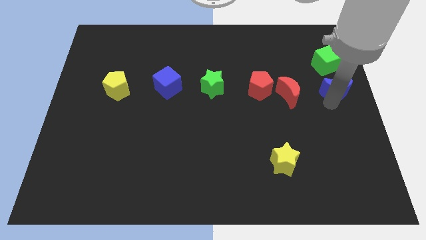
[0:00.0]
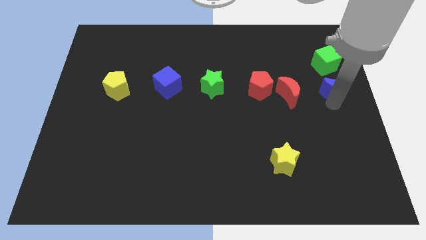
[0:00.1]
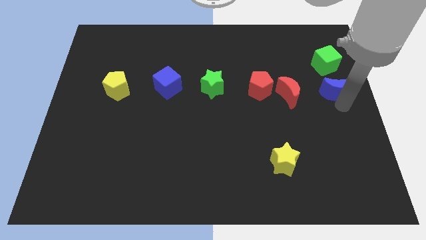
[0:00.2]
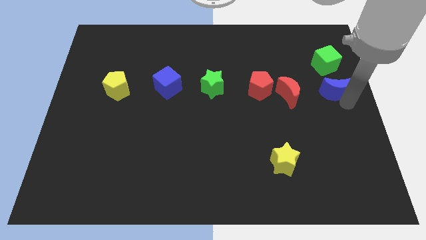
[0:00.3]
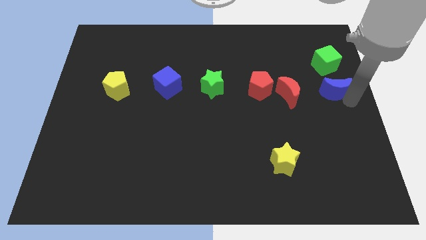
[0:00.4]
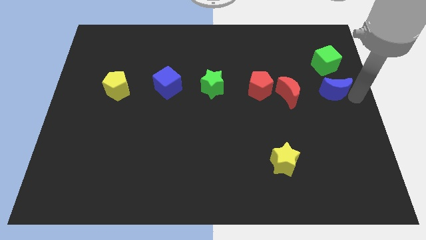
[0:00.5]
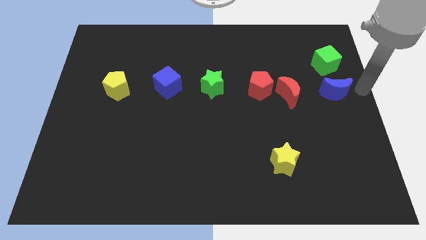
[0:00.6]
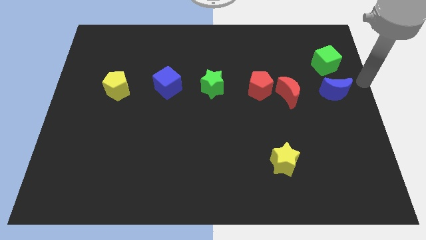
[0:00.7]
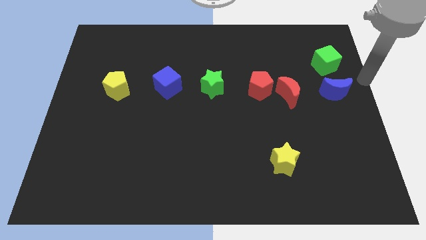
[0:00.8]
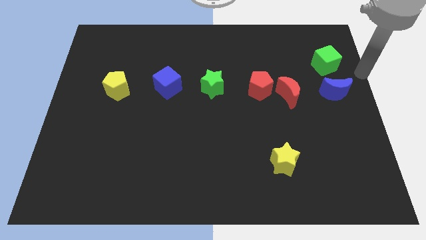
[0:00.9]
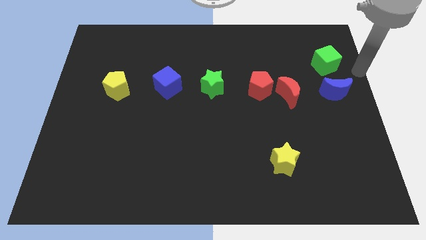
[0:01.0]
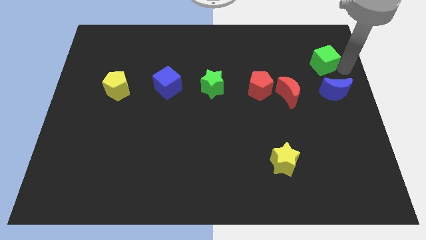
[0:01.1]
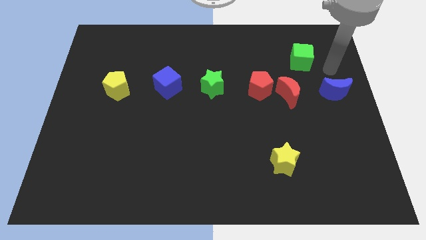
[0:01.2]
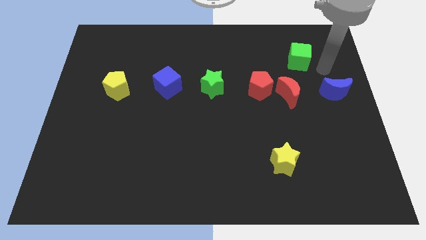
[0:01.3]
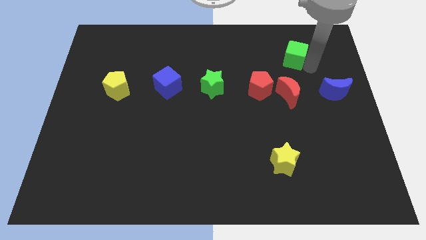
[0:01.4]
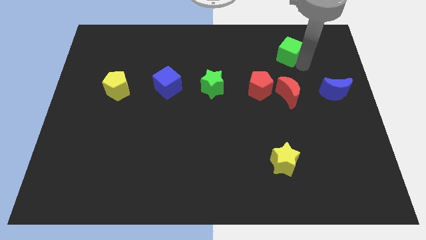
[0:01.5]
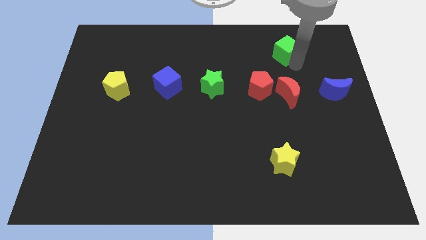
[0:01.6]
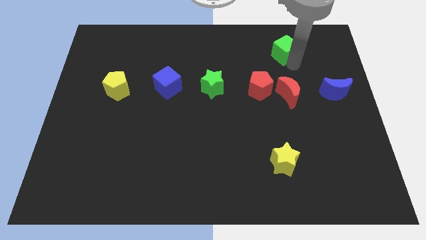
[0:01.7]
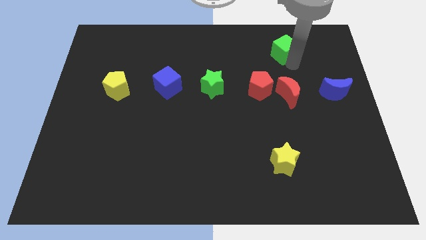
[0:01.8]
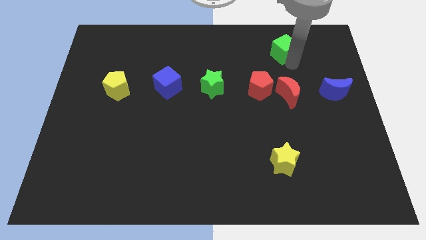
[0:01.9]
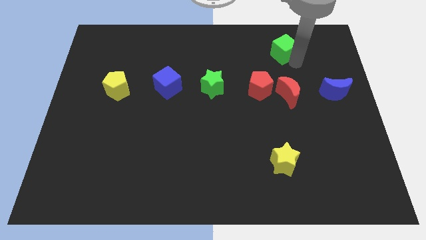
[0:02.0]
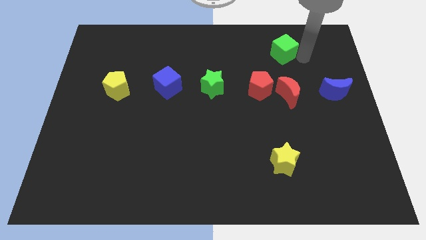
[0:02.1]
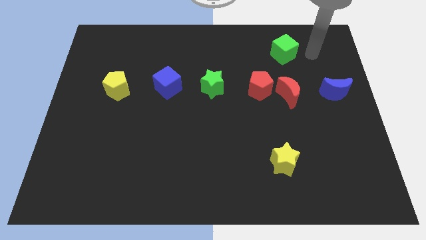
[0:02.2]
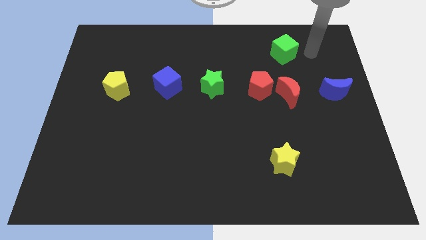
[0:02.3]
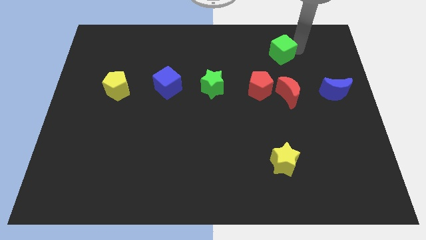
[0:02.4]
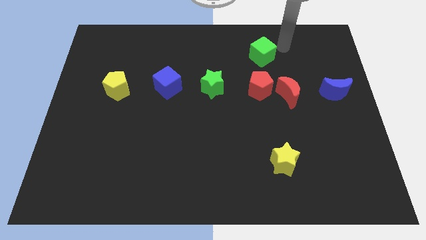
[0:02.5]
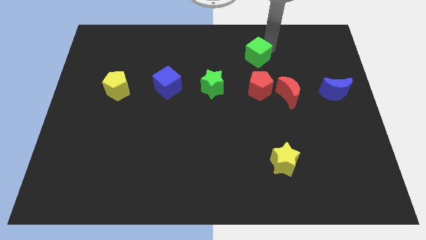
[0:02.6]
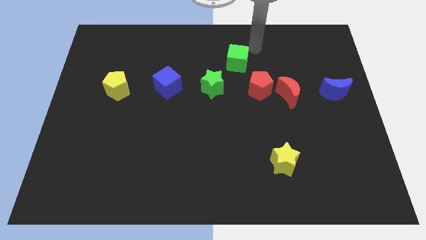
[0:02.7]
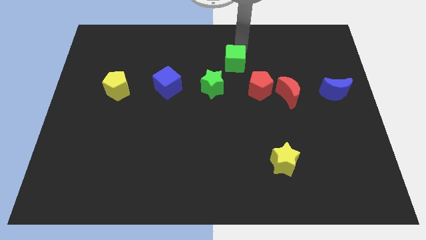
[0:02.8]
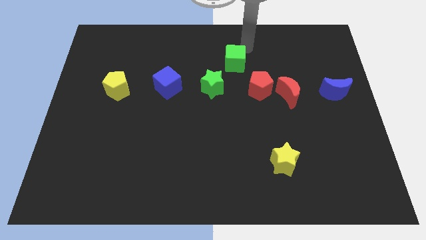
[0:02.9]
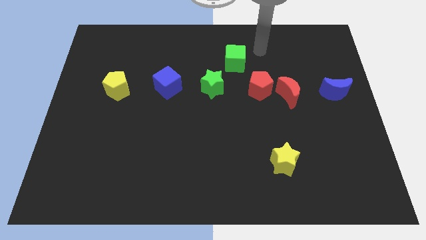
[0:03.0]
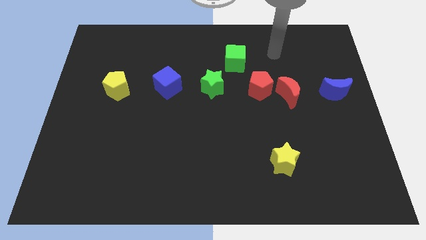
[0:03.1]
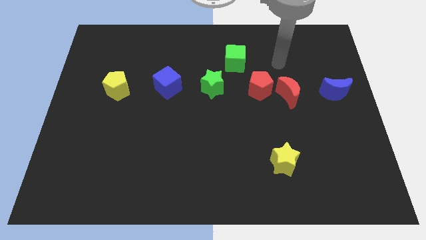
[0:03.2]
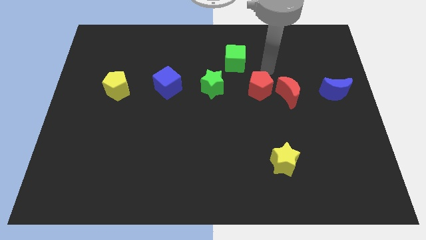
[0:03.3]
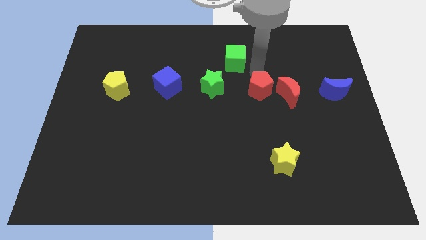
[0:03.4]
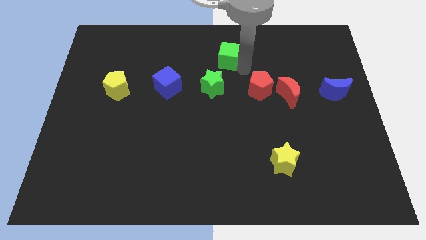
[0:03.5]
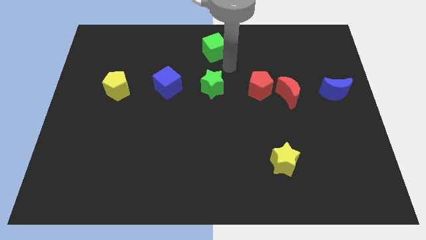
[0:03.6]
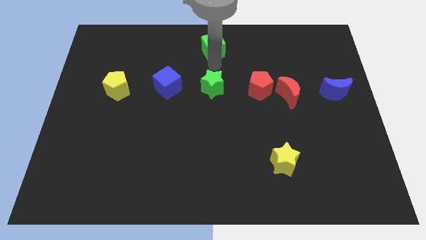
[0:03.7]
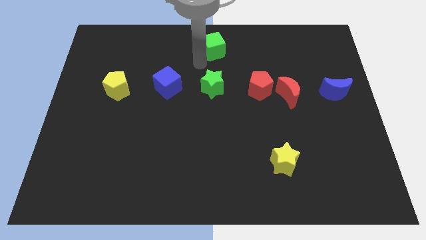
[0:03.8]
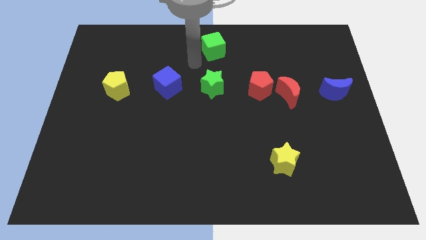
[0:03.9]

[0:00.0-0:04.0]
place the green cube at the top of green star

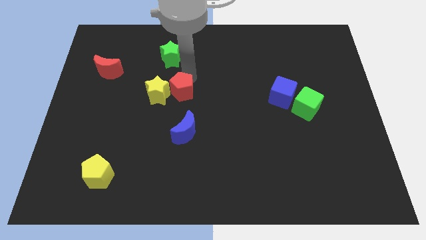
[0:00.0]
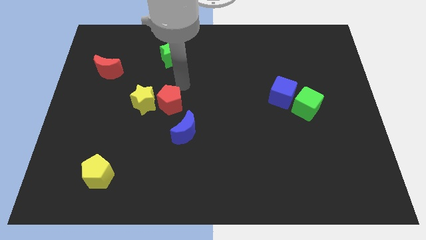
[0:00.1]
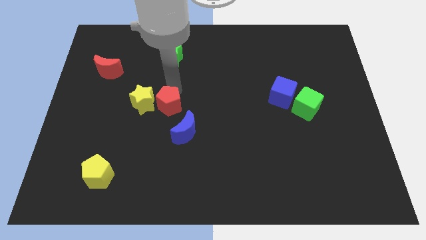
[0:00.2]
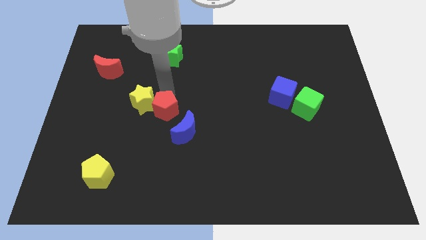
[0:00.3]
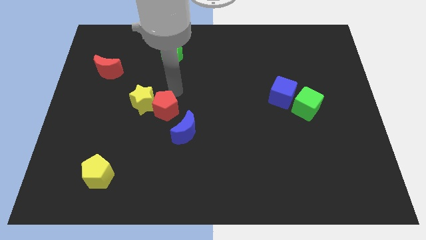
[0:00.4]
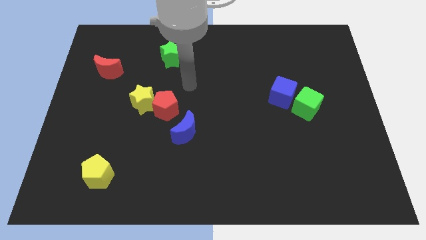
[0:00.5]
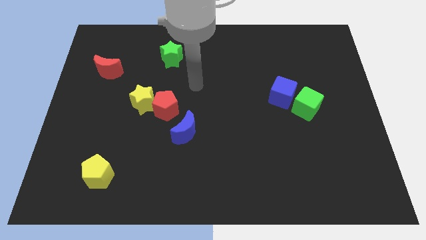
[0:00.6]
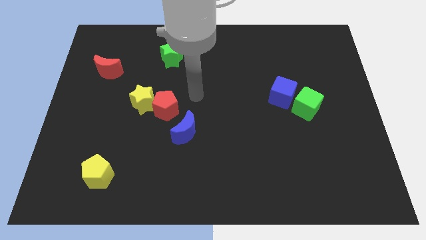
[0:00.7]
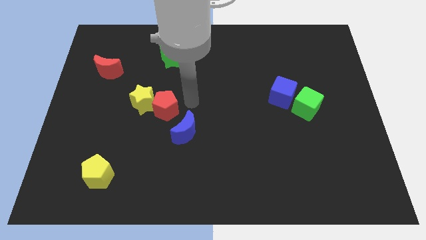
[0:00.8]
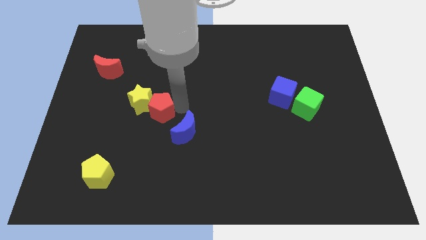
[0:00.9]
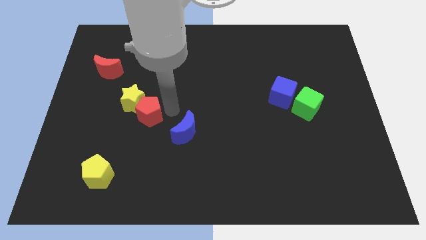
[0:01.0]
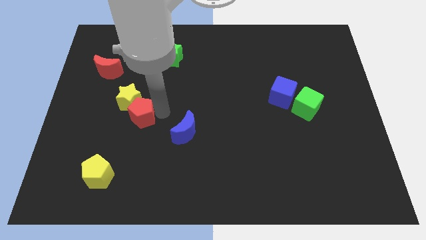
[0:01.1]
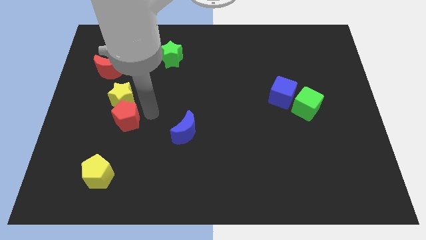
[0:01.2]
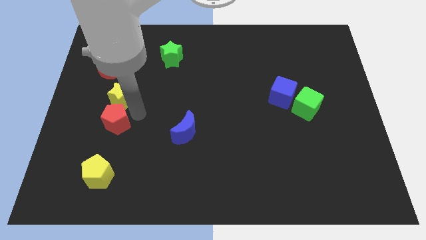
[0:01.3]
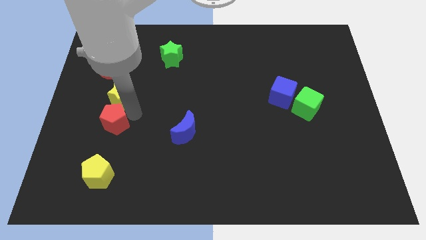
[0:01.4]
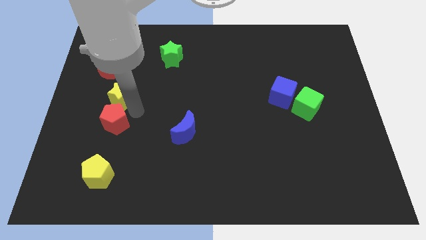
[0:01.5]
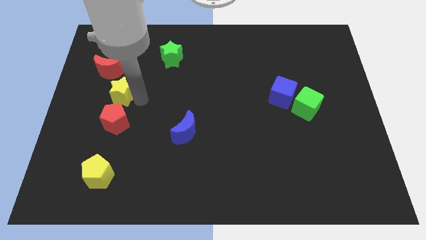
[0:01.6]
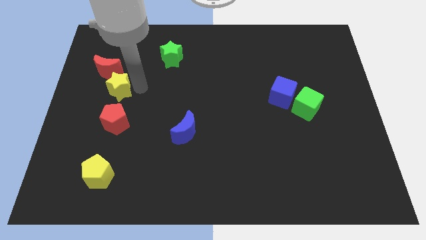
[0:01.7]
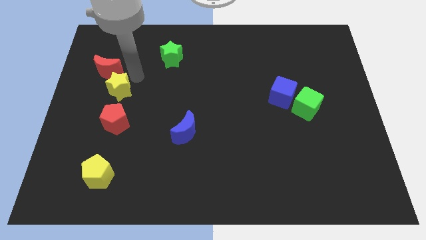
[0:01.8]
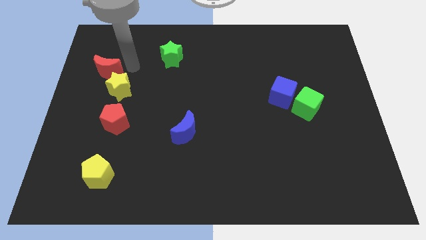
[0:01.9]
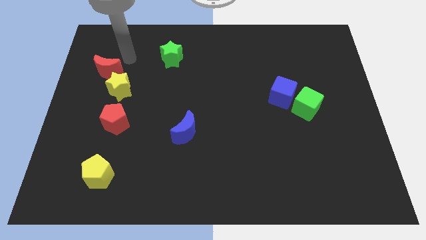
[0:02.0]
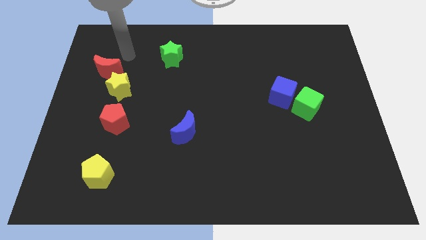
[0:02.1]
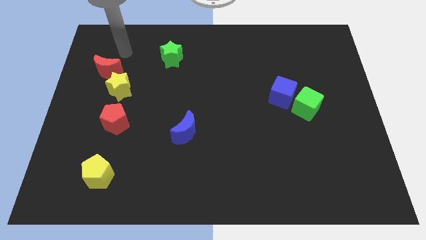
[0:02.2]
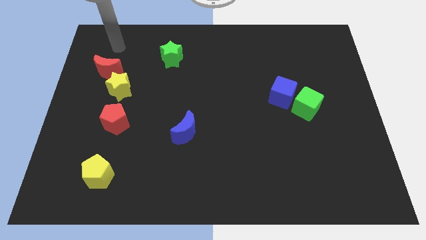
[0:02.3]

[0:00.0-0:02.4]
push the yellow star and red pentagon to the center left

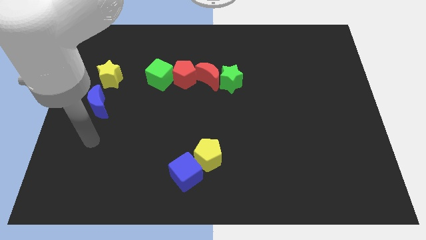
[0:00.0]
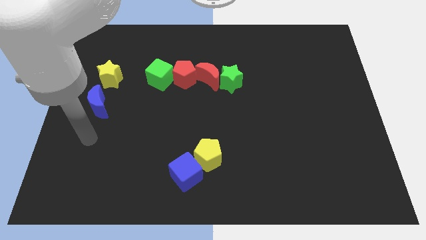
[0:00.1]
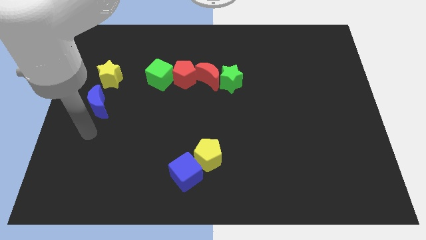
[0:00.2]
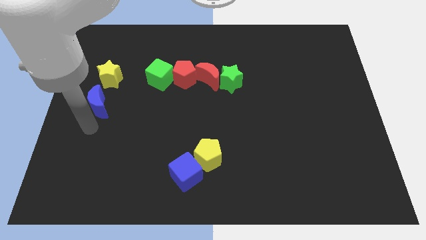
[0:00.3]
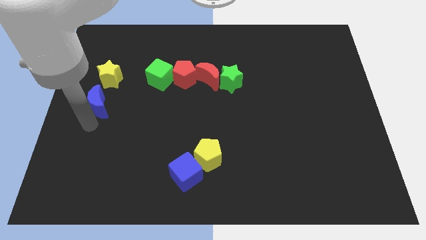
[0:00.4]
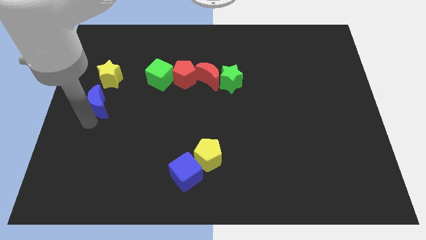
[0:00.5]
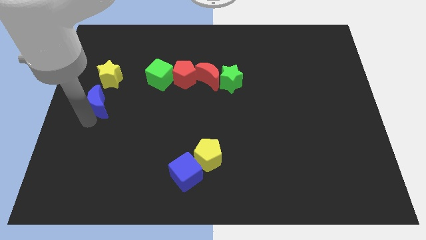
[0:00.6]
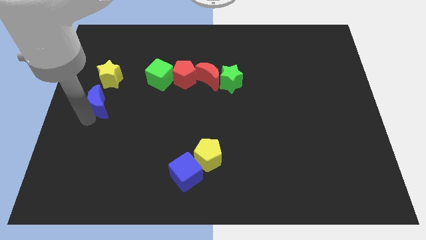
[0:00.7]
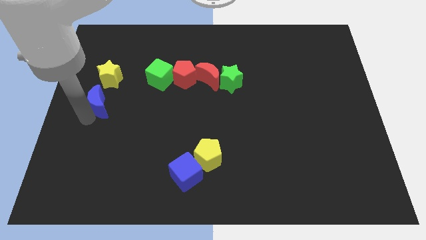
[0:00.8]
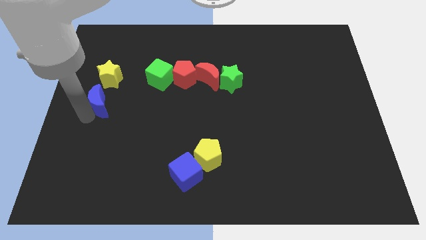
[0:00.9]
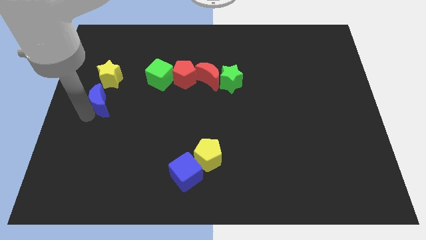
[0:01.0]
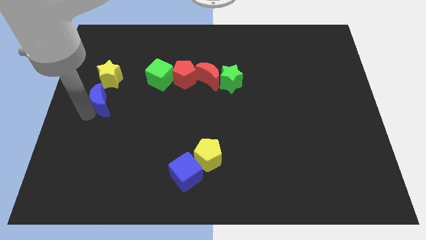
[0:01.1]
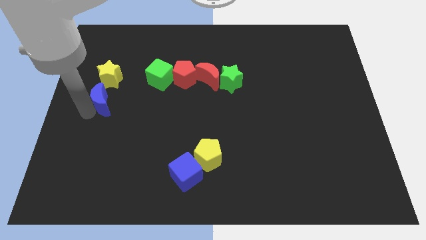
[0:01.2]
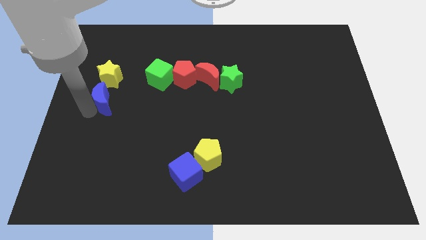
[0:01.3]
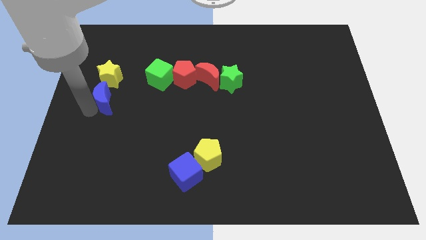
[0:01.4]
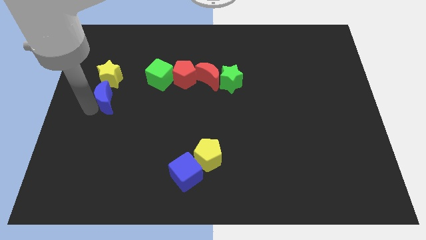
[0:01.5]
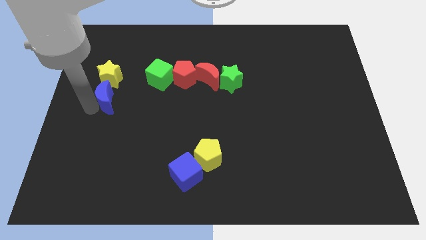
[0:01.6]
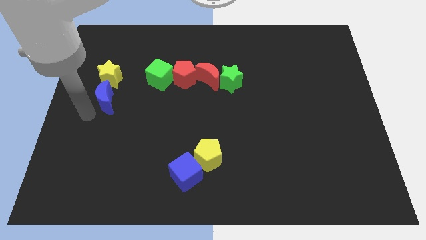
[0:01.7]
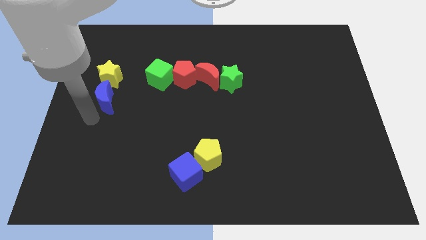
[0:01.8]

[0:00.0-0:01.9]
place blue moon below the yellow star

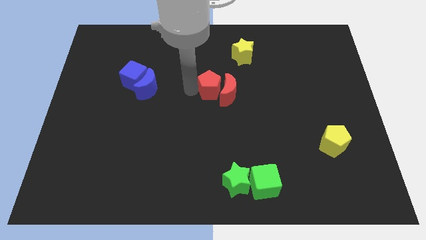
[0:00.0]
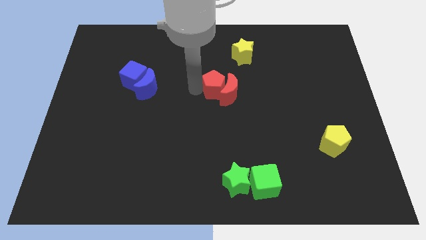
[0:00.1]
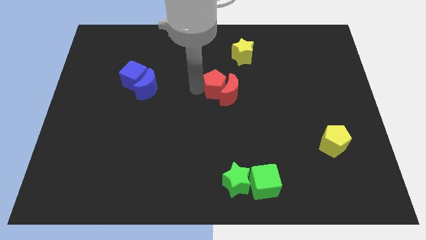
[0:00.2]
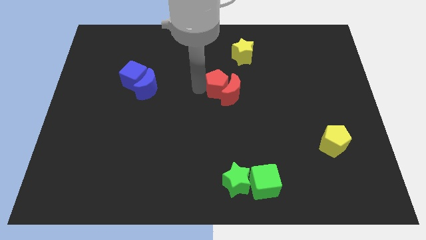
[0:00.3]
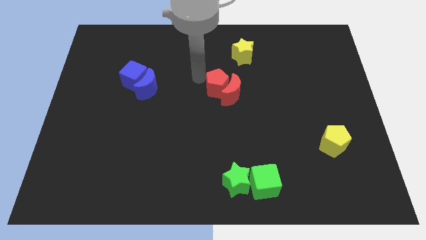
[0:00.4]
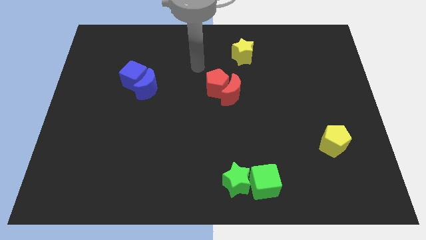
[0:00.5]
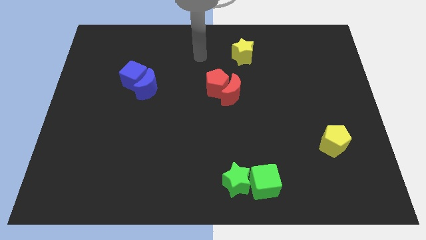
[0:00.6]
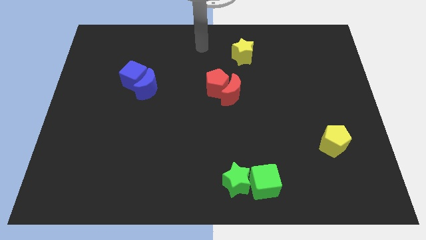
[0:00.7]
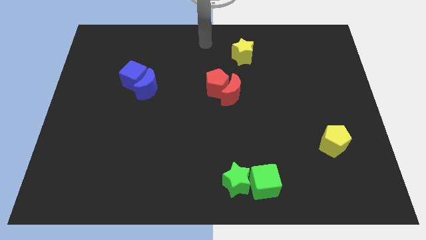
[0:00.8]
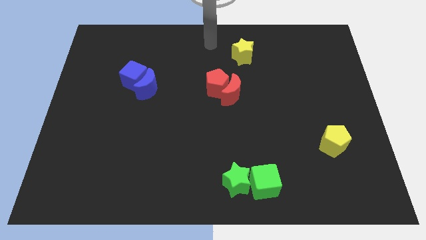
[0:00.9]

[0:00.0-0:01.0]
push the red pentagon to the center on the board
